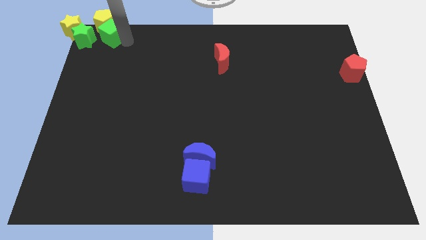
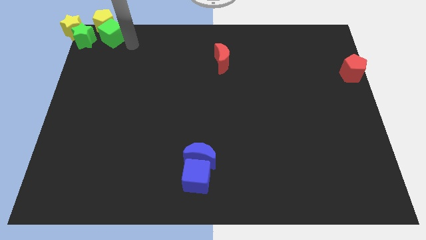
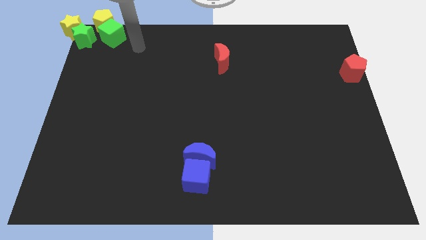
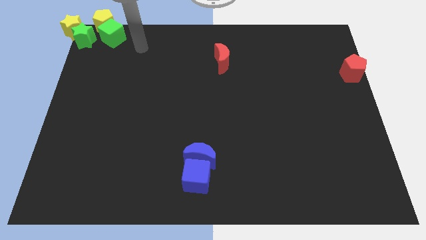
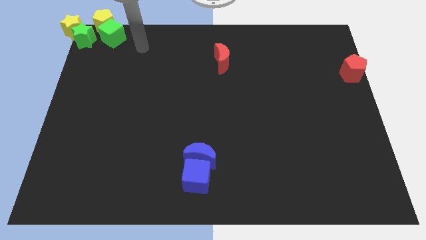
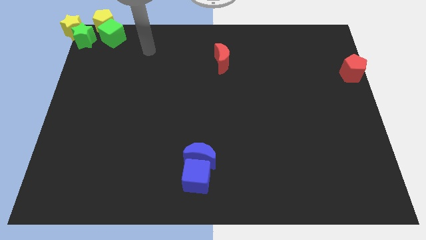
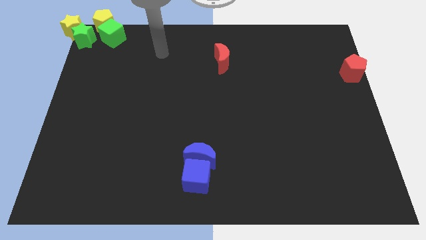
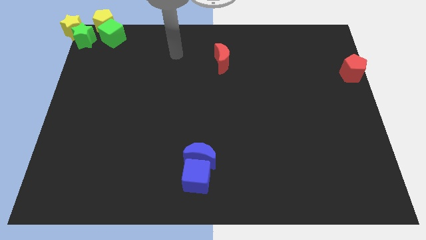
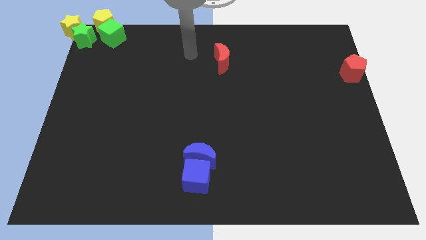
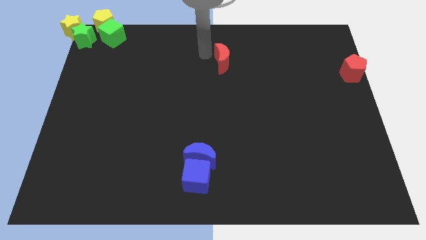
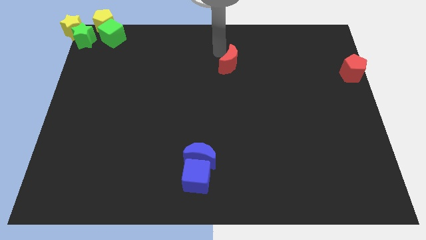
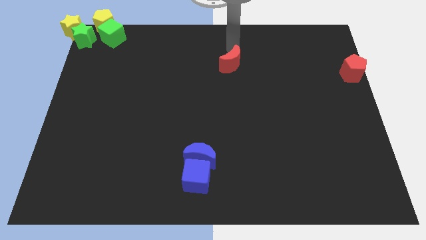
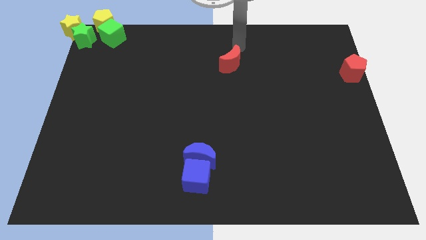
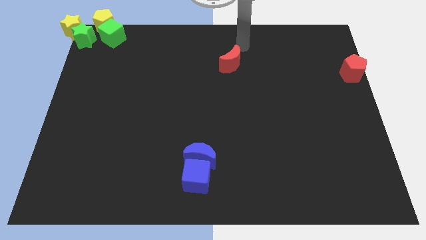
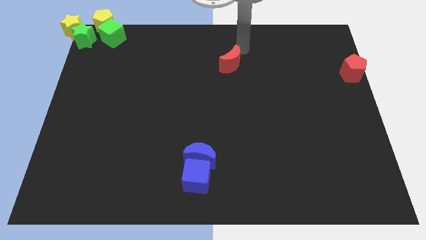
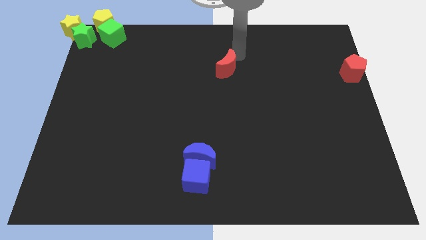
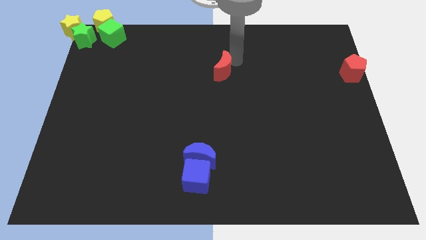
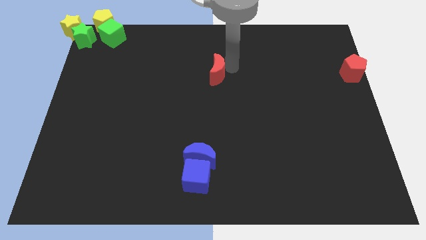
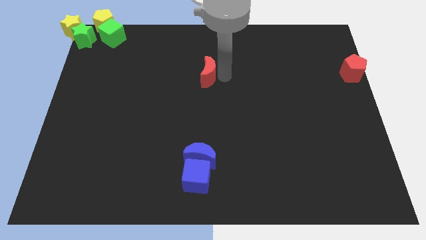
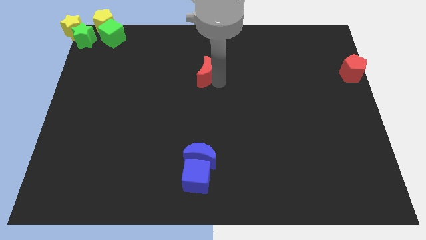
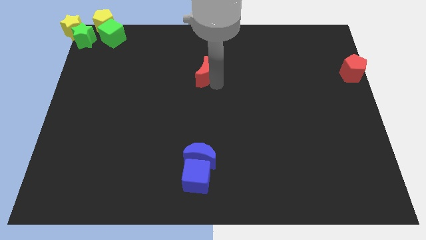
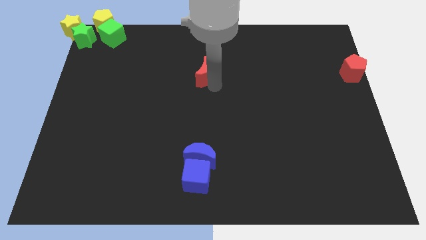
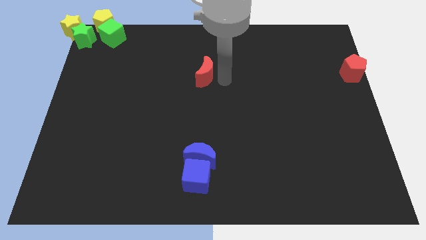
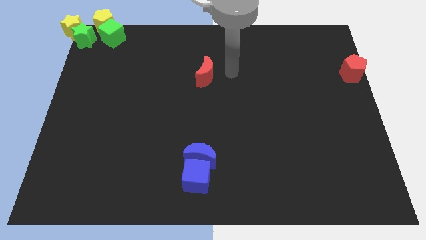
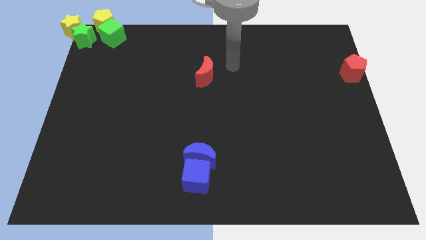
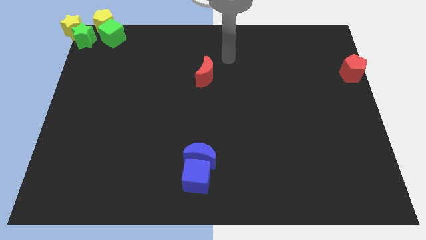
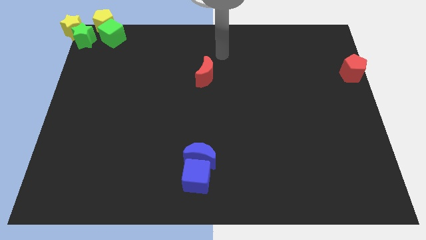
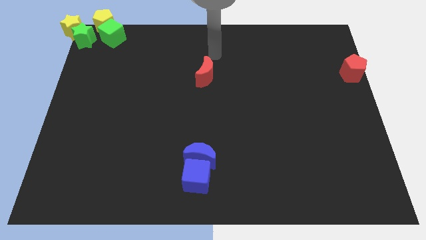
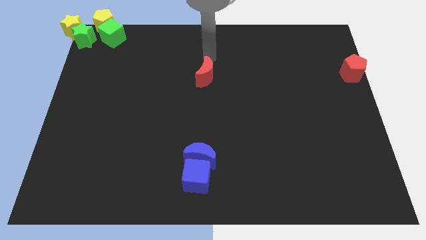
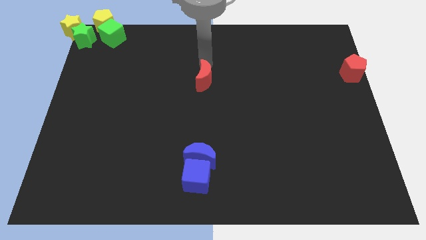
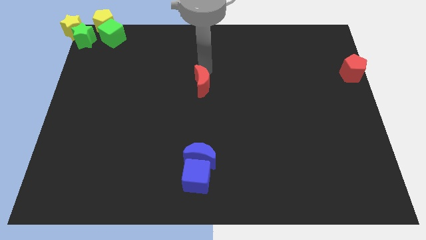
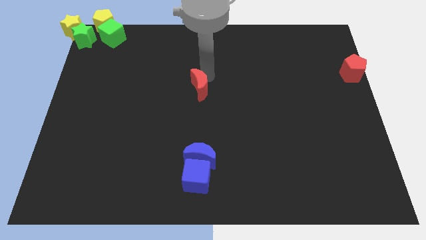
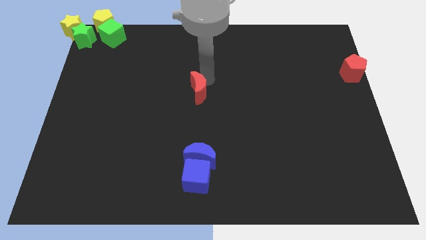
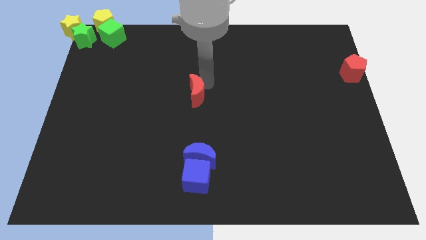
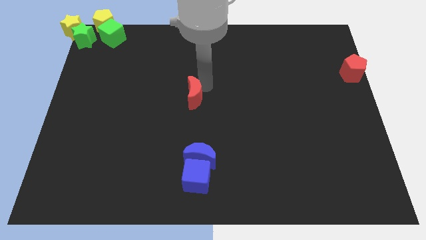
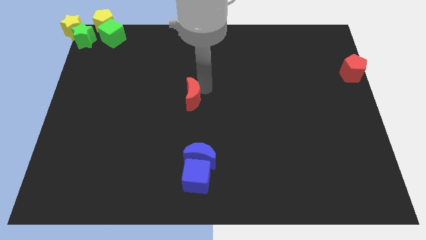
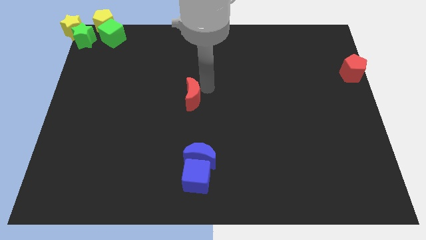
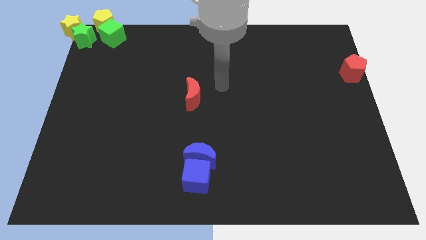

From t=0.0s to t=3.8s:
move the red crescent to the center of the board

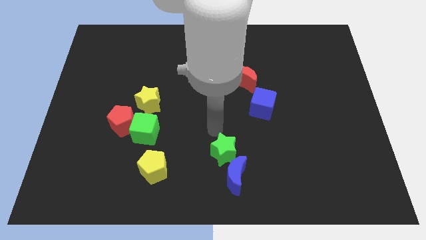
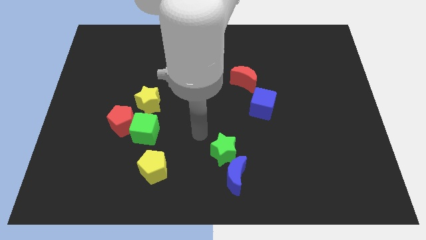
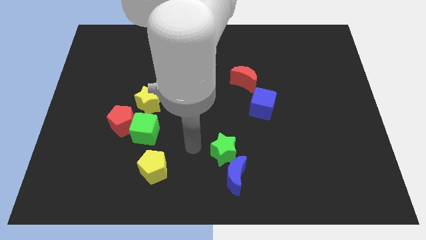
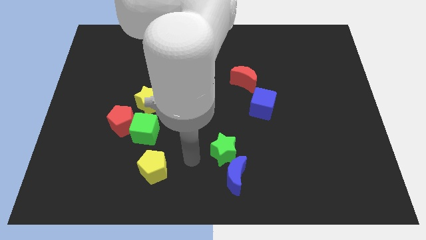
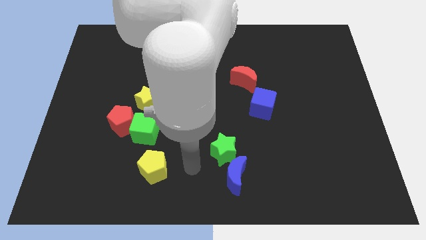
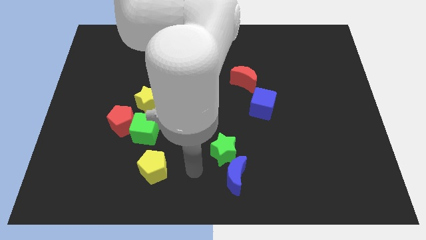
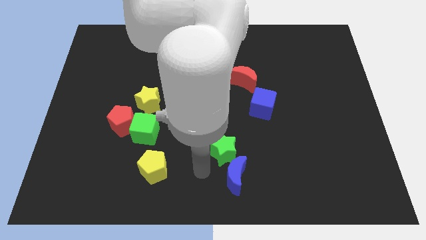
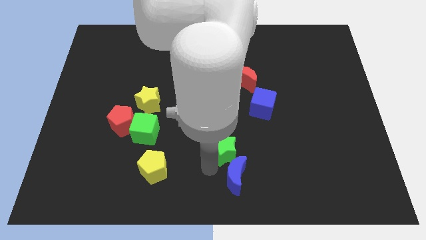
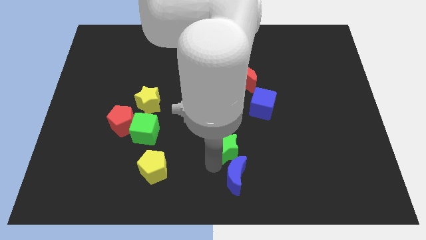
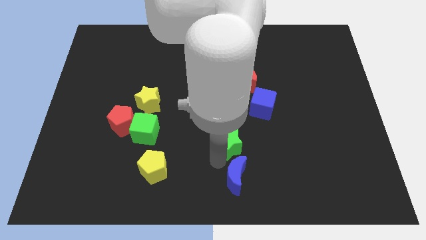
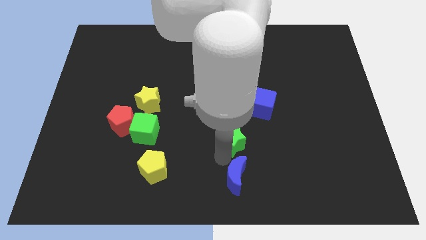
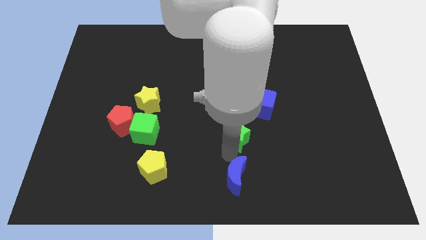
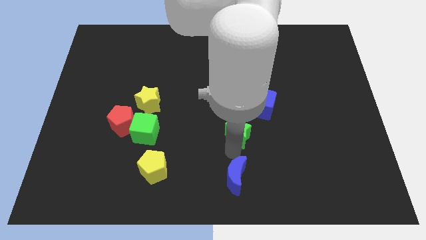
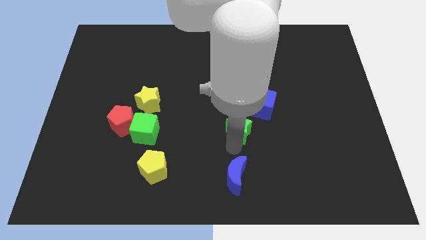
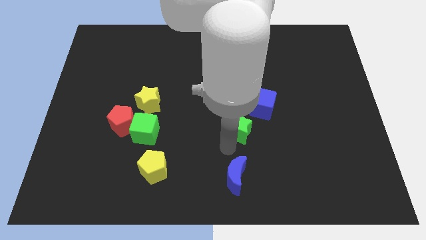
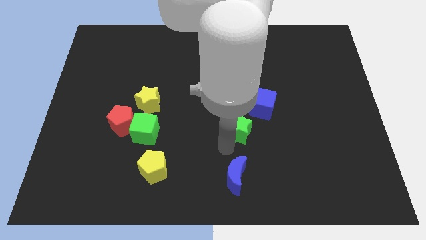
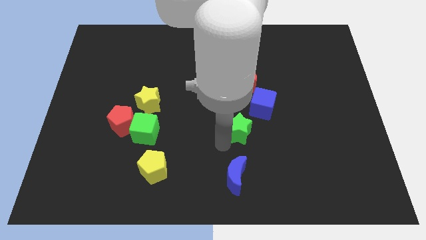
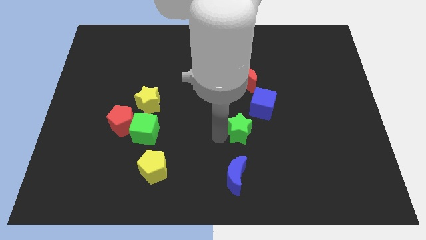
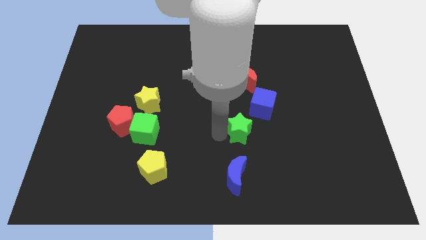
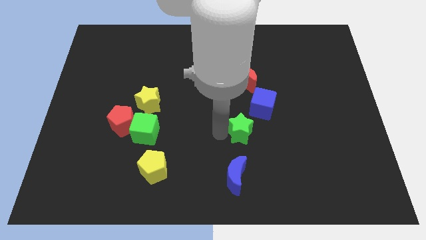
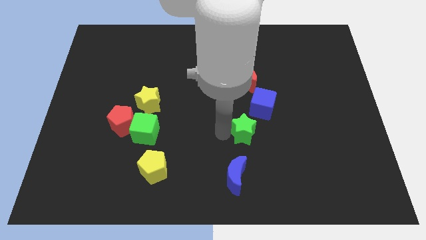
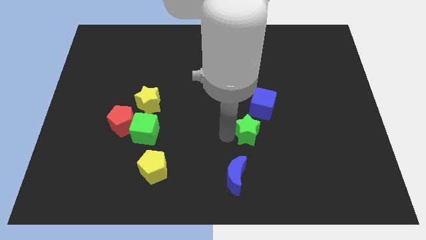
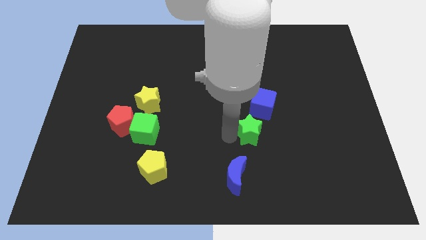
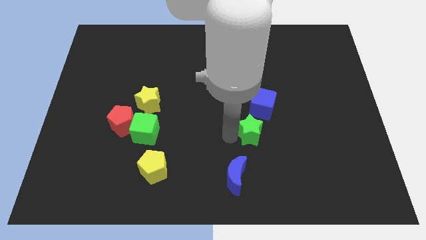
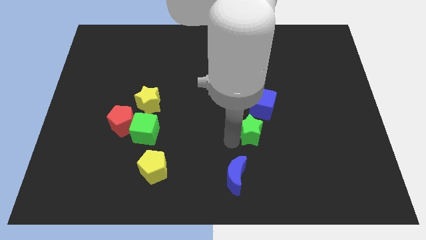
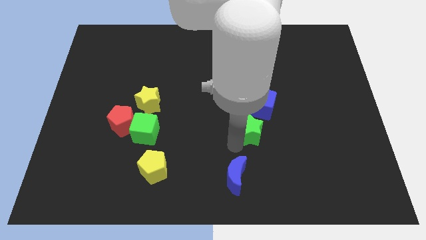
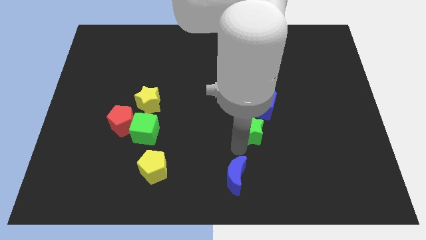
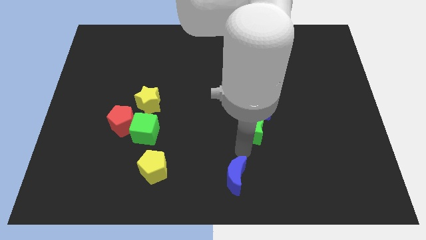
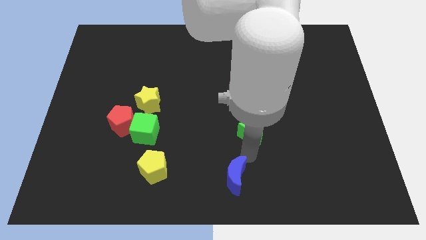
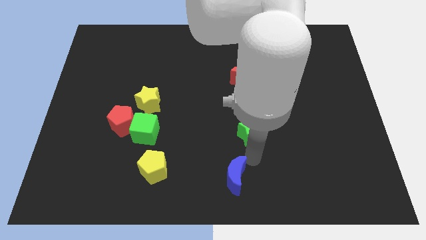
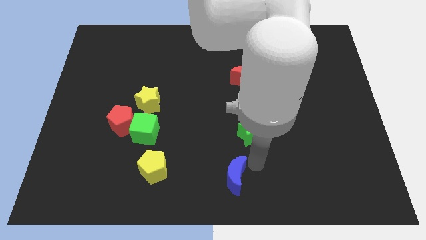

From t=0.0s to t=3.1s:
move the green star parallel to the green cube

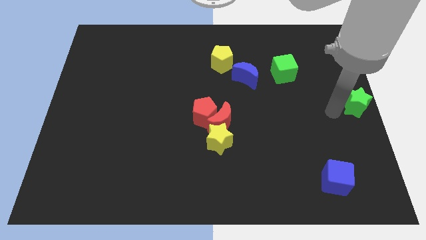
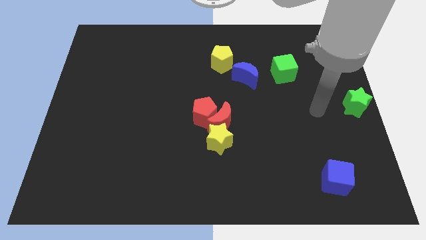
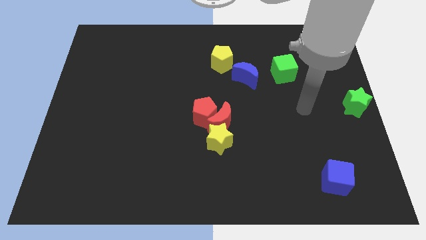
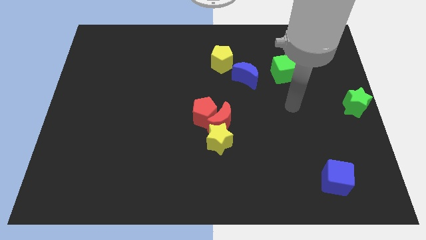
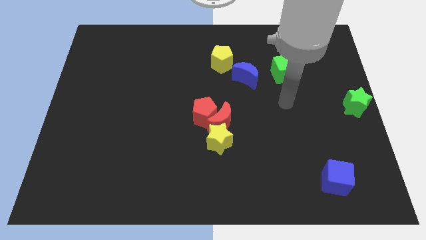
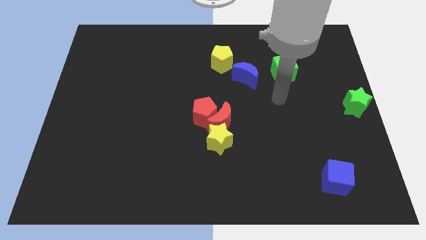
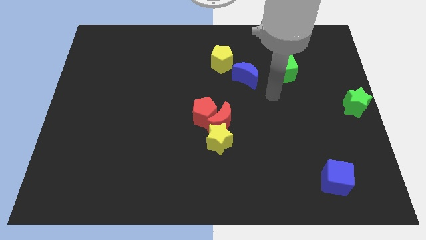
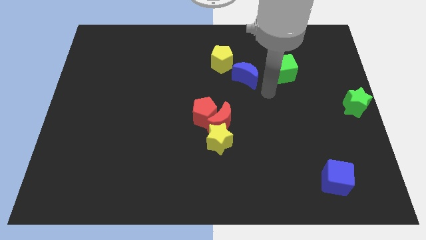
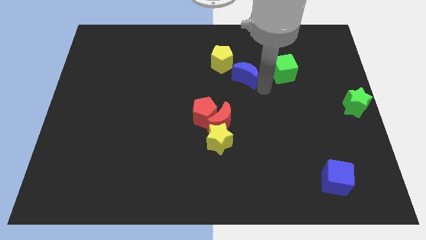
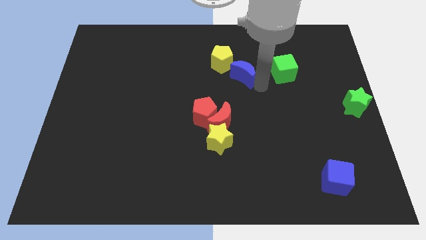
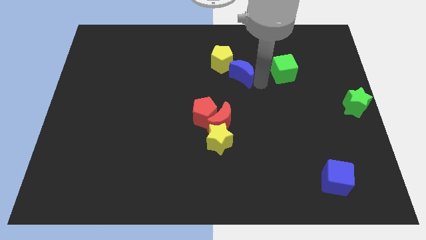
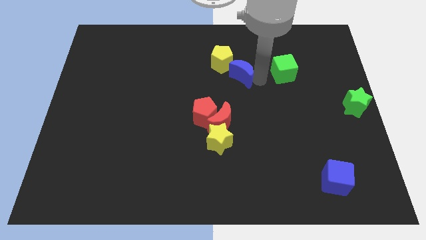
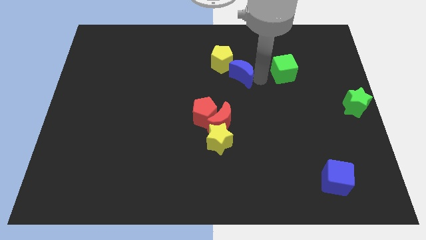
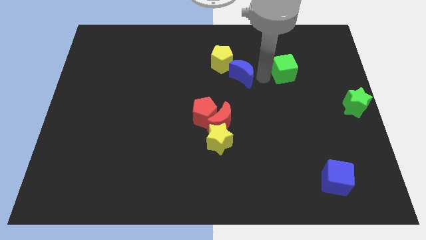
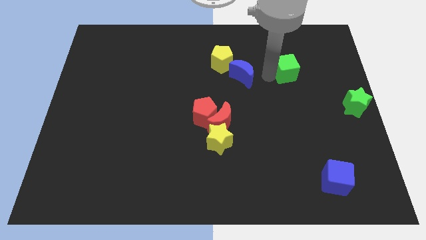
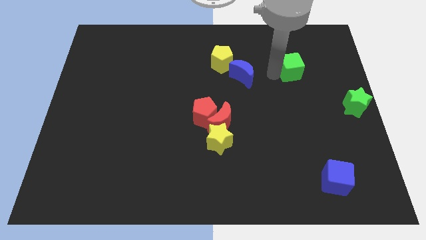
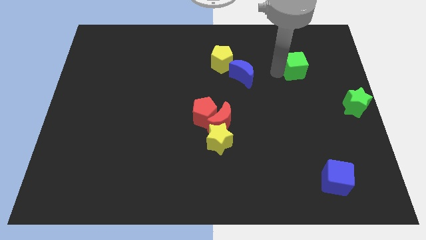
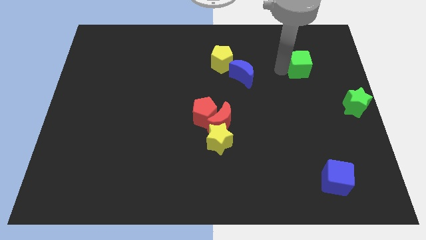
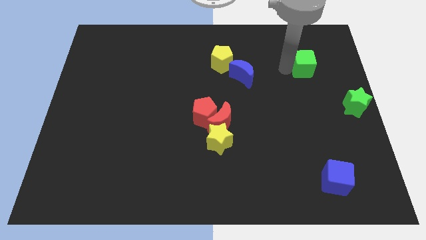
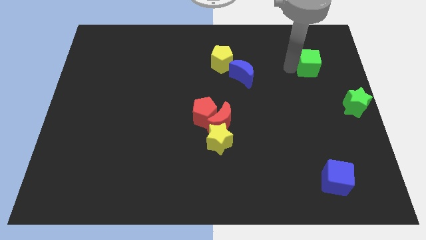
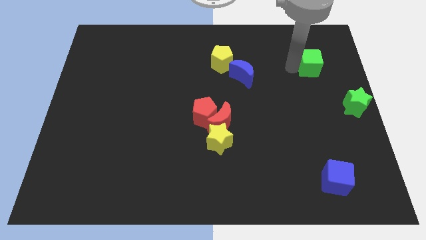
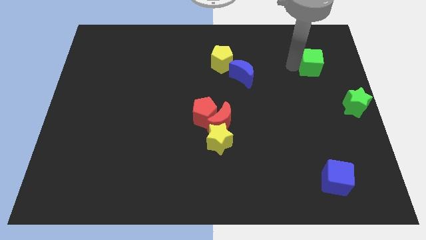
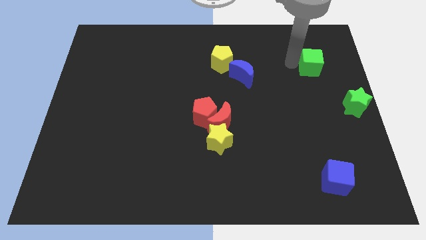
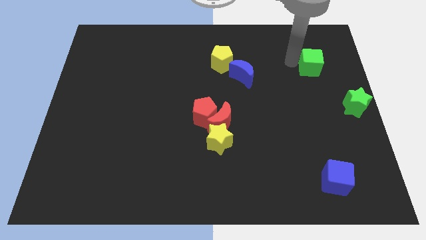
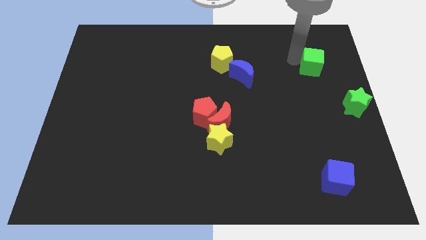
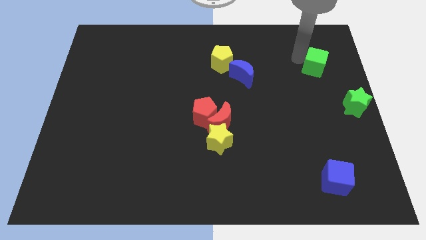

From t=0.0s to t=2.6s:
move the green cube towards the top right side
